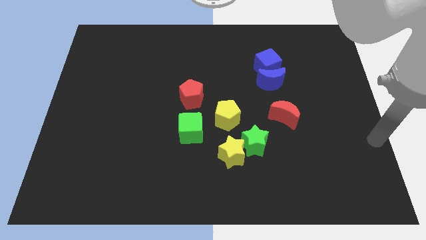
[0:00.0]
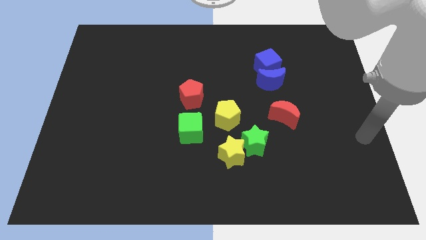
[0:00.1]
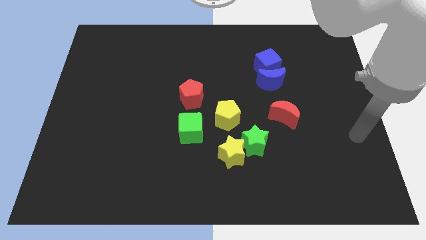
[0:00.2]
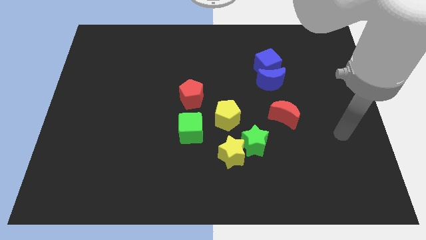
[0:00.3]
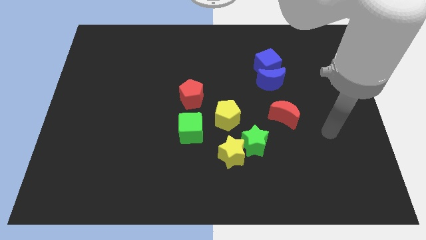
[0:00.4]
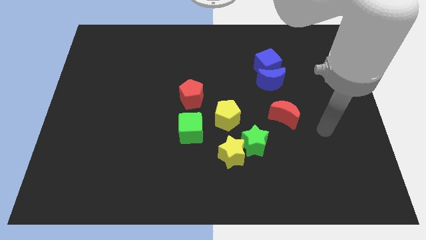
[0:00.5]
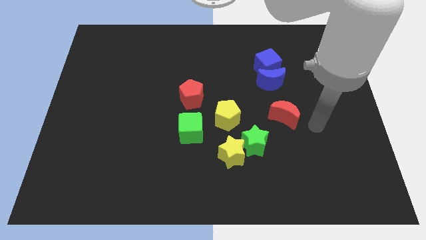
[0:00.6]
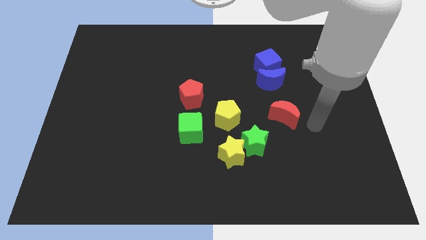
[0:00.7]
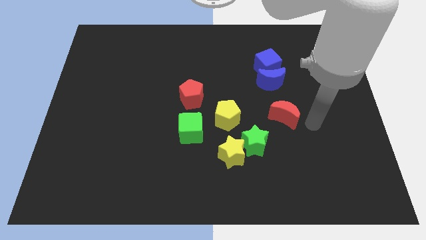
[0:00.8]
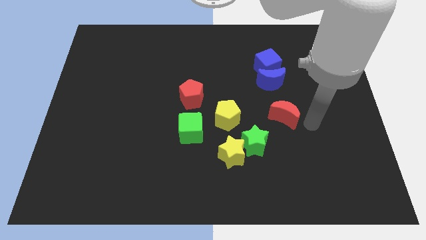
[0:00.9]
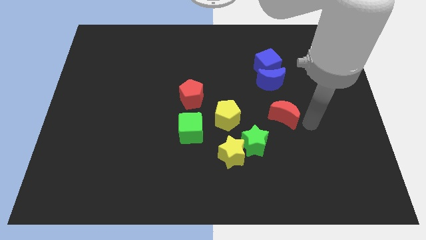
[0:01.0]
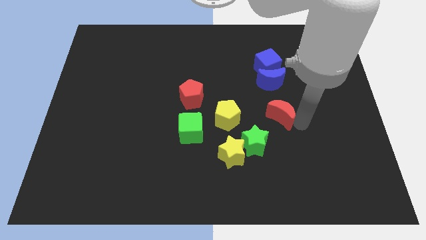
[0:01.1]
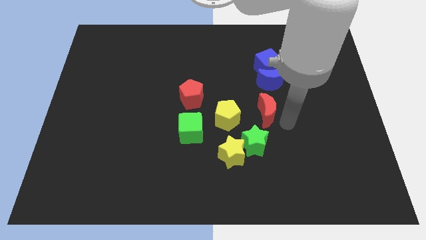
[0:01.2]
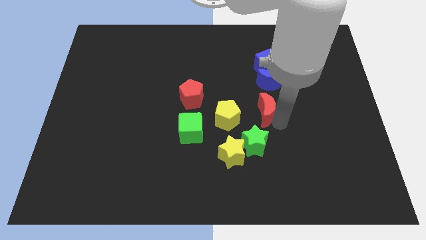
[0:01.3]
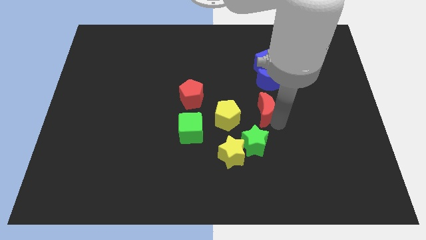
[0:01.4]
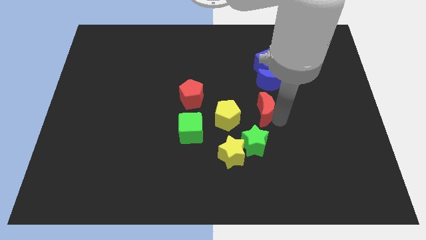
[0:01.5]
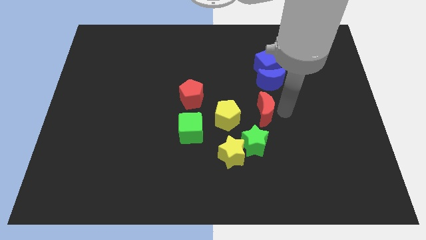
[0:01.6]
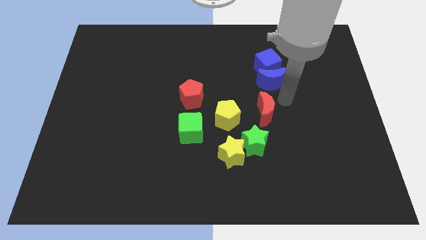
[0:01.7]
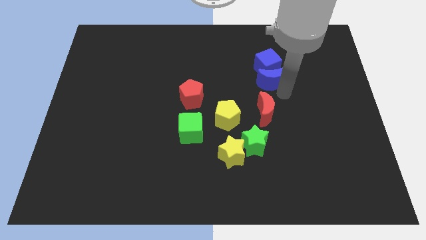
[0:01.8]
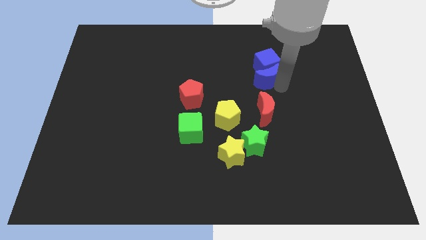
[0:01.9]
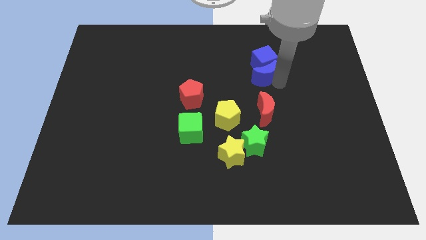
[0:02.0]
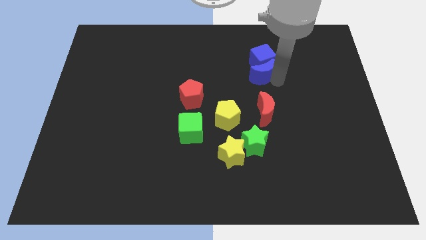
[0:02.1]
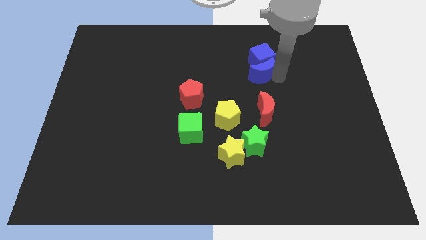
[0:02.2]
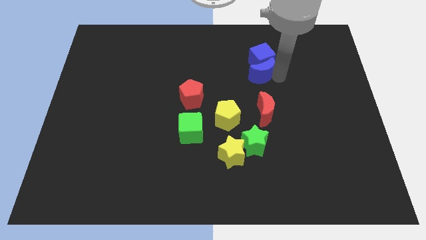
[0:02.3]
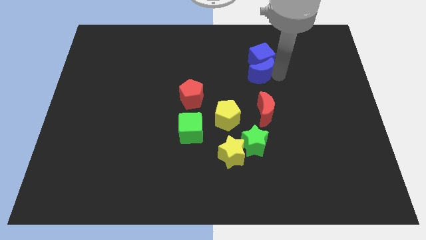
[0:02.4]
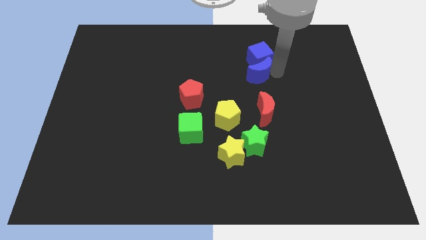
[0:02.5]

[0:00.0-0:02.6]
point your arm below blue cube

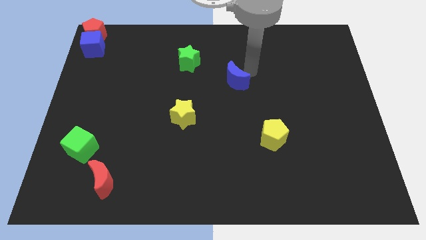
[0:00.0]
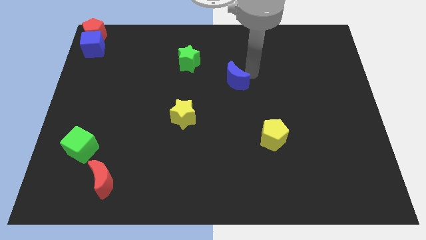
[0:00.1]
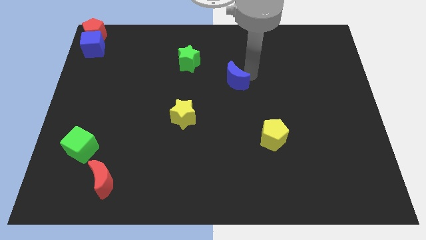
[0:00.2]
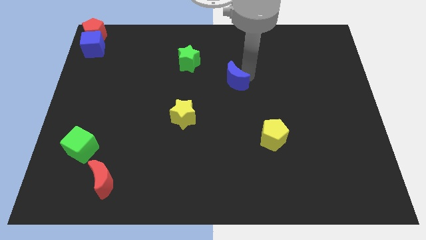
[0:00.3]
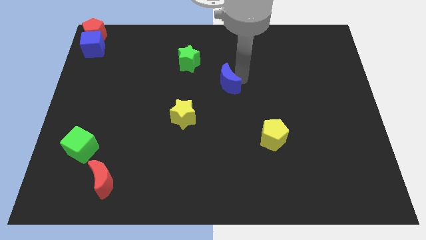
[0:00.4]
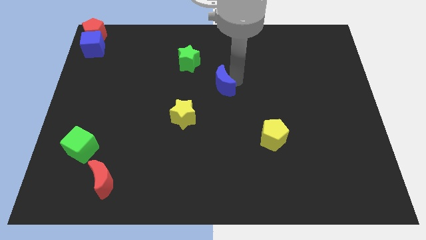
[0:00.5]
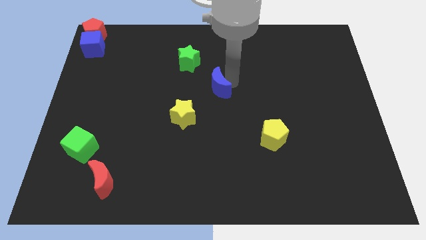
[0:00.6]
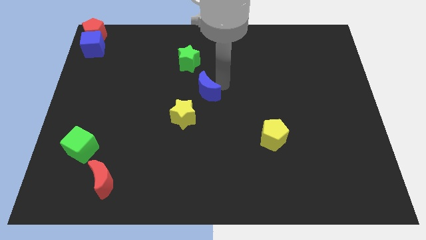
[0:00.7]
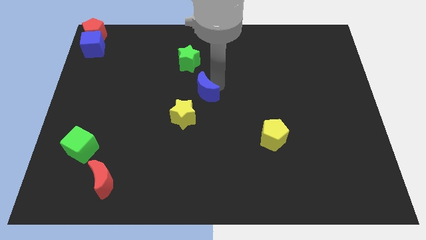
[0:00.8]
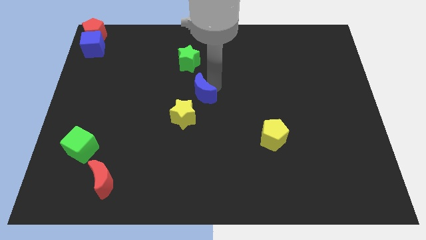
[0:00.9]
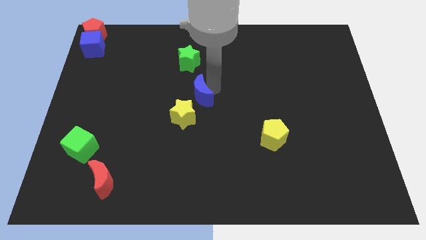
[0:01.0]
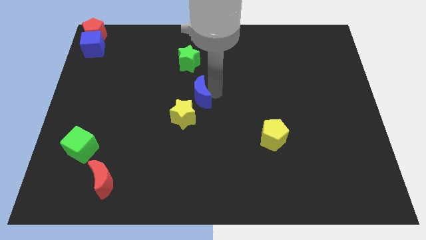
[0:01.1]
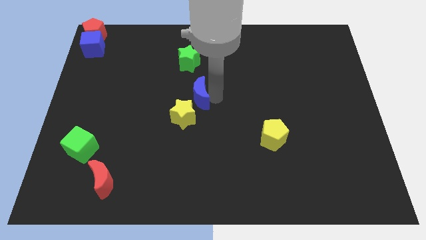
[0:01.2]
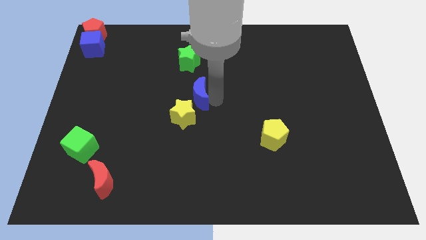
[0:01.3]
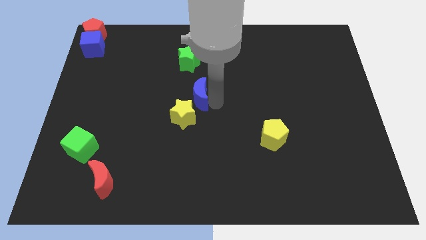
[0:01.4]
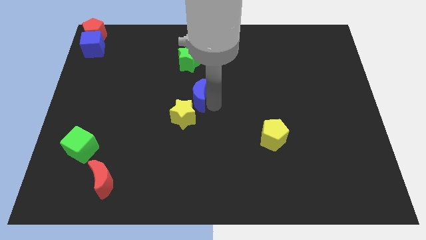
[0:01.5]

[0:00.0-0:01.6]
push the blue crescent to the center of the board

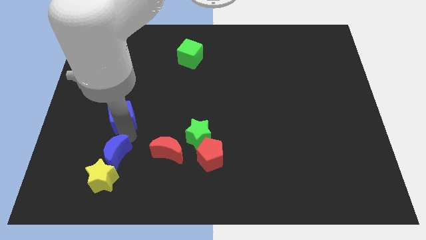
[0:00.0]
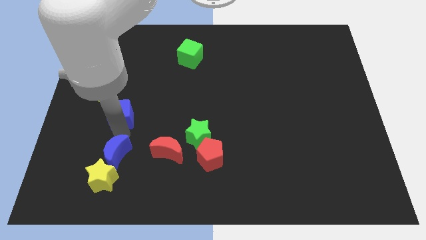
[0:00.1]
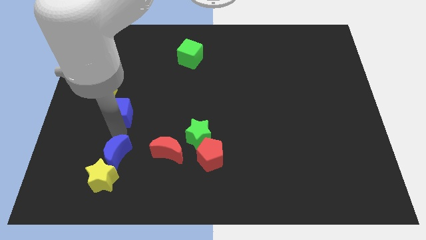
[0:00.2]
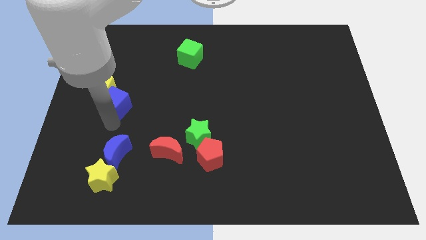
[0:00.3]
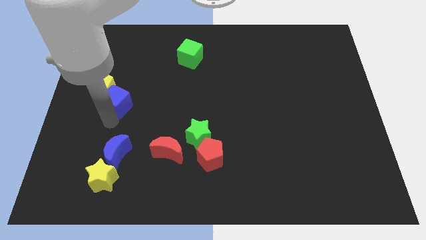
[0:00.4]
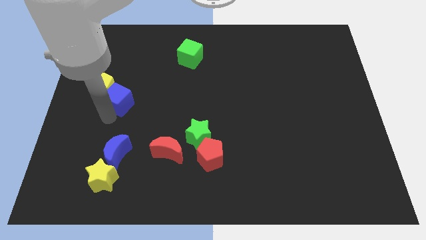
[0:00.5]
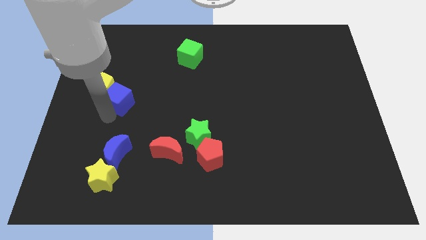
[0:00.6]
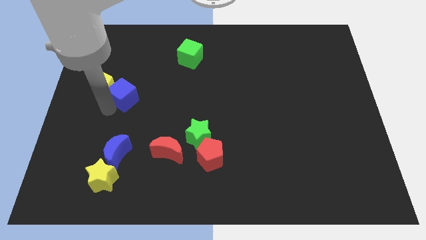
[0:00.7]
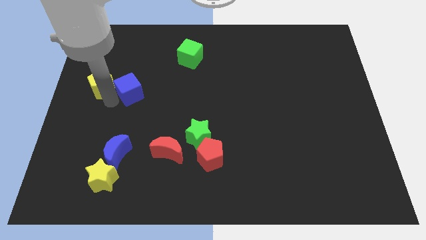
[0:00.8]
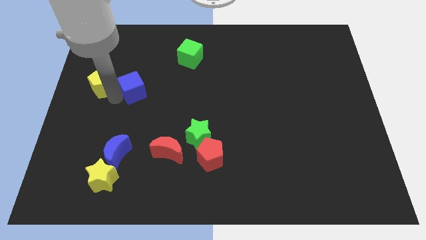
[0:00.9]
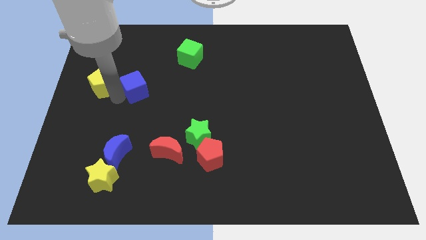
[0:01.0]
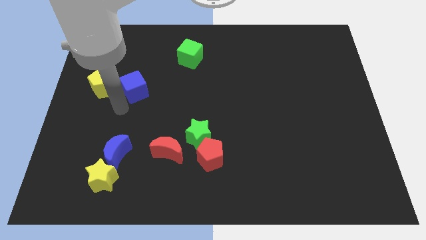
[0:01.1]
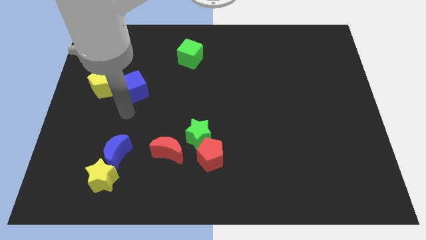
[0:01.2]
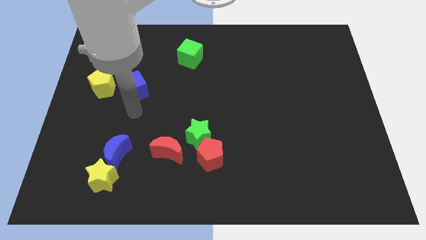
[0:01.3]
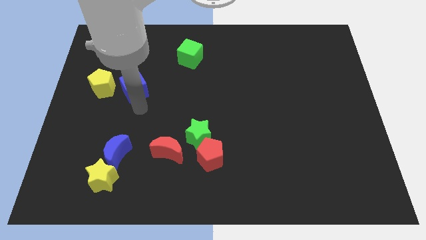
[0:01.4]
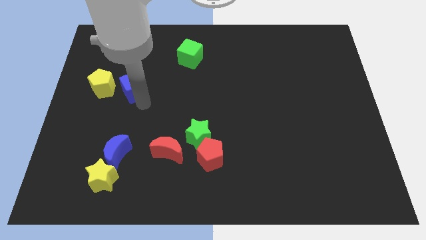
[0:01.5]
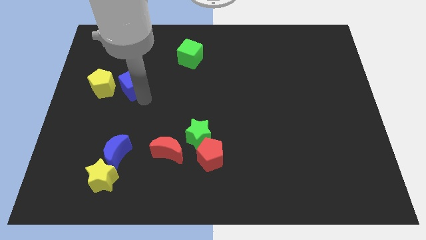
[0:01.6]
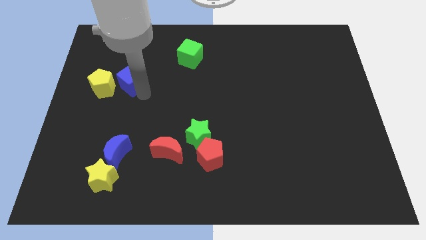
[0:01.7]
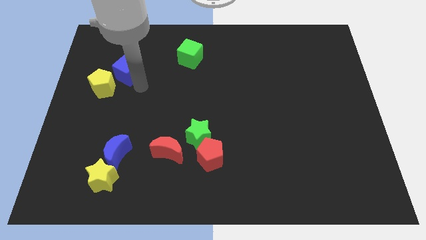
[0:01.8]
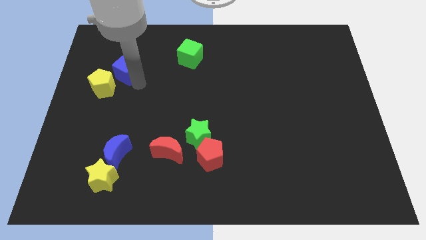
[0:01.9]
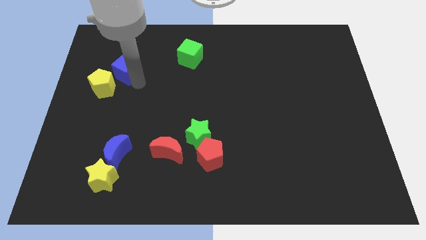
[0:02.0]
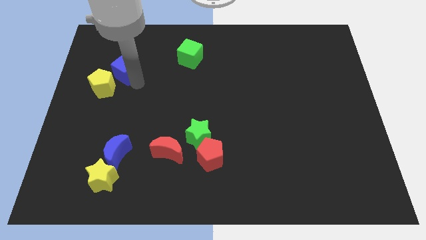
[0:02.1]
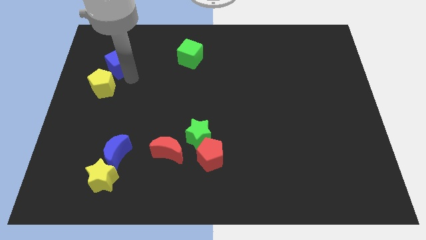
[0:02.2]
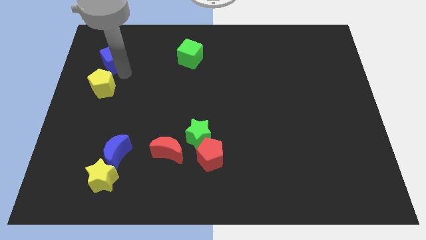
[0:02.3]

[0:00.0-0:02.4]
separate the blue cube from the blue moon

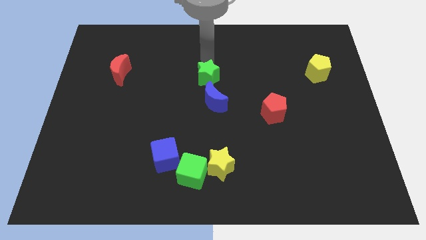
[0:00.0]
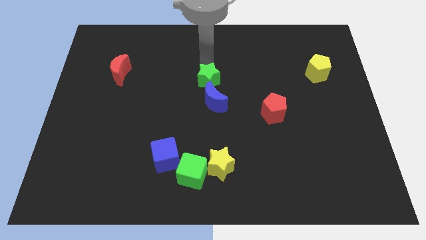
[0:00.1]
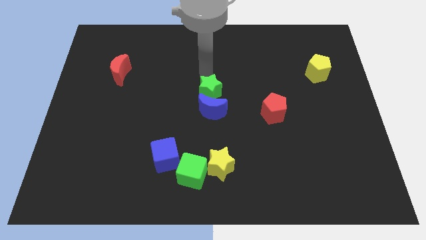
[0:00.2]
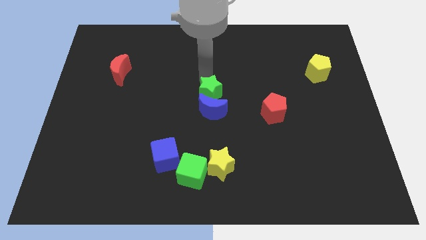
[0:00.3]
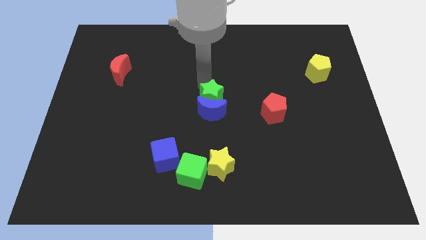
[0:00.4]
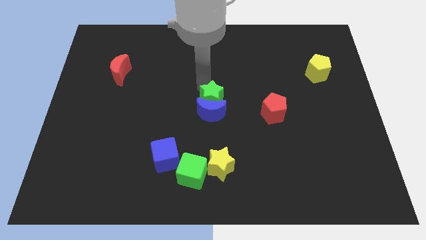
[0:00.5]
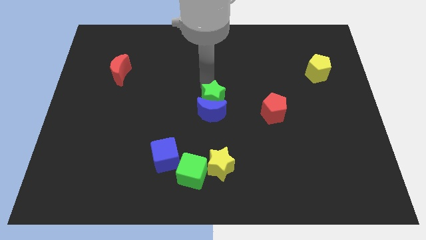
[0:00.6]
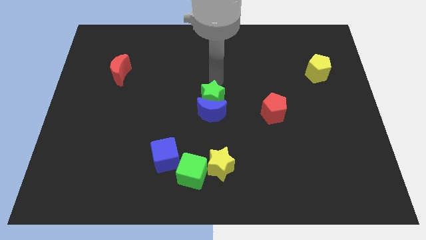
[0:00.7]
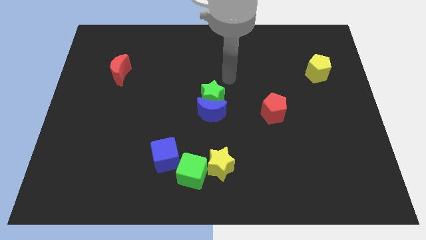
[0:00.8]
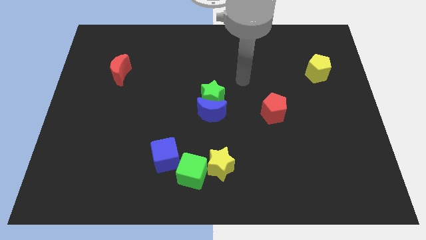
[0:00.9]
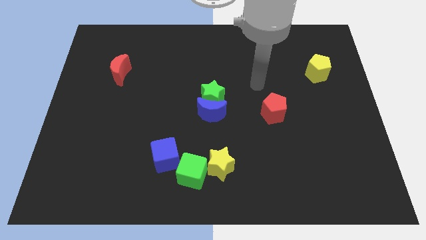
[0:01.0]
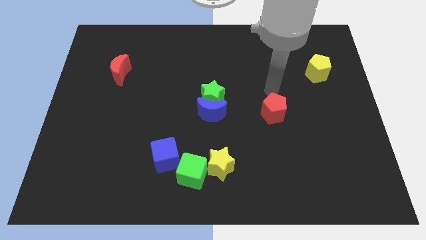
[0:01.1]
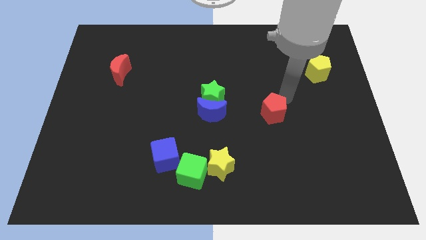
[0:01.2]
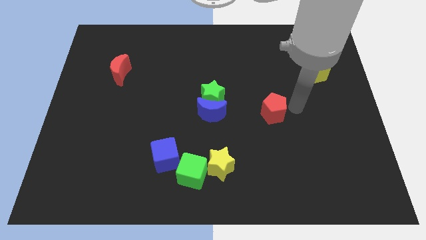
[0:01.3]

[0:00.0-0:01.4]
move your arm away from the green star

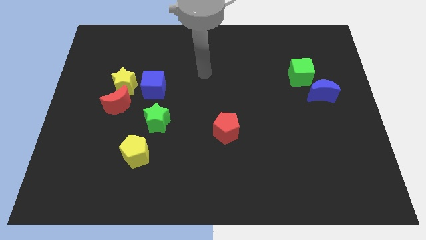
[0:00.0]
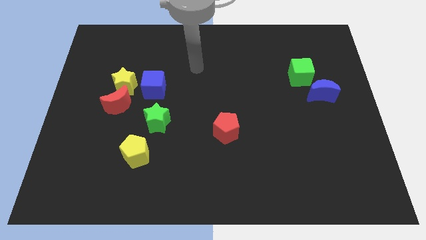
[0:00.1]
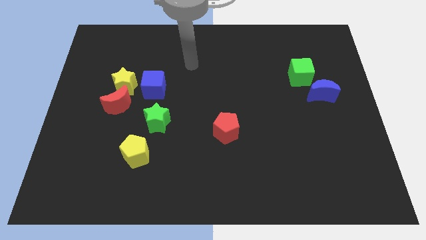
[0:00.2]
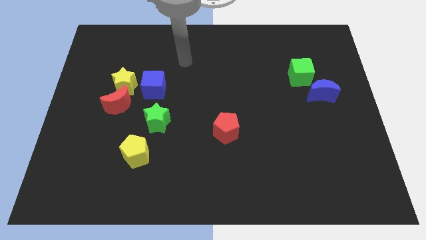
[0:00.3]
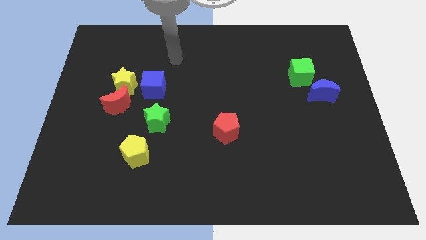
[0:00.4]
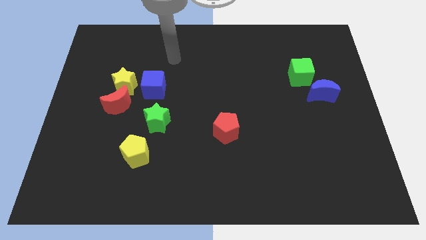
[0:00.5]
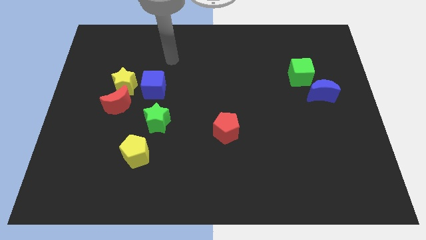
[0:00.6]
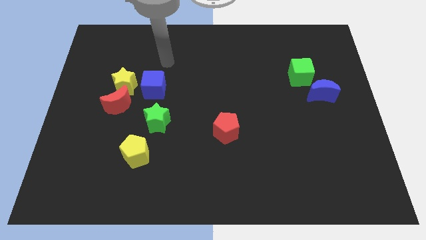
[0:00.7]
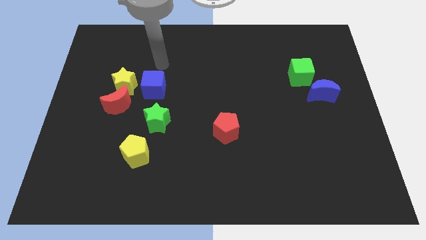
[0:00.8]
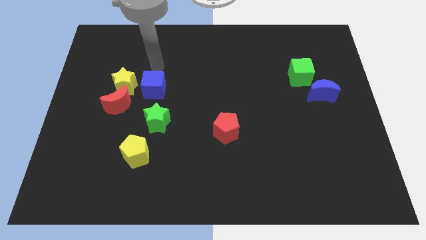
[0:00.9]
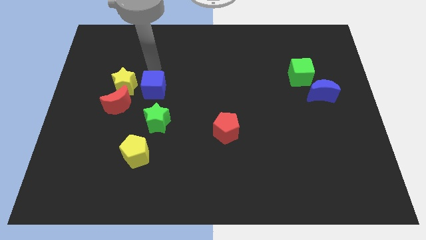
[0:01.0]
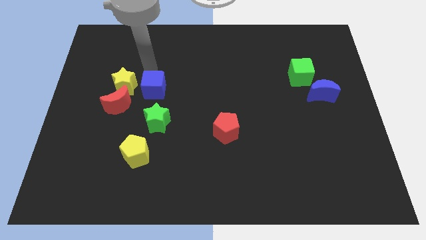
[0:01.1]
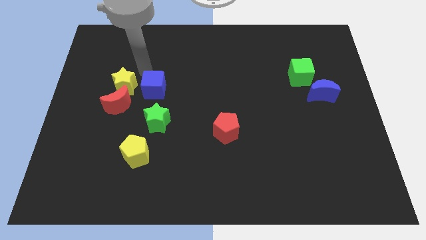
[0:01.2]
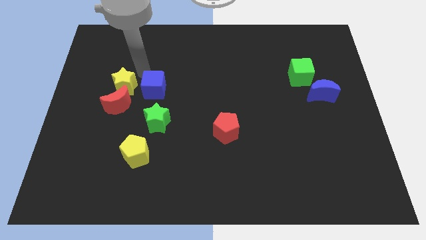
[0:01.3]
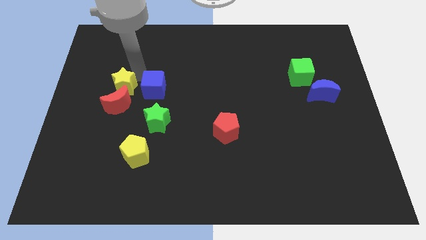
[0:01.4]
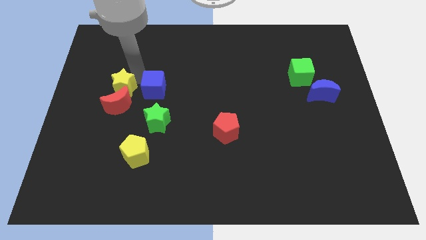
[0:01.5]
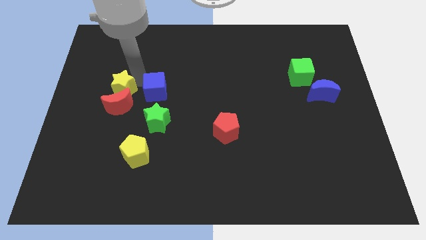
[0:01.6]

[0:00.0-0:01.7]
move your arm close to the blue cube
